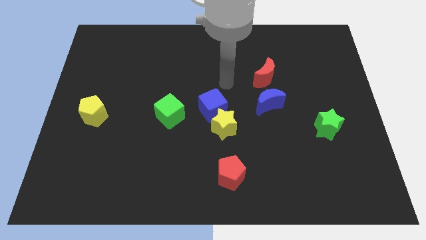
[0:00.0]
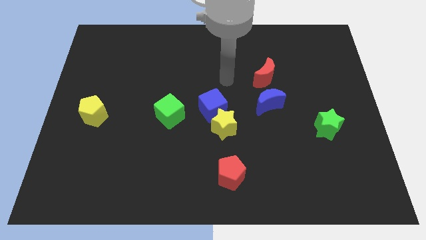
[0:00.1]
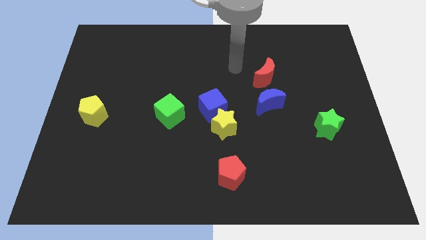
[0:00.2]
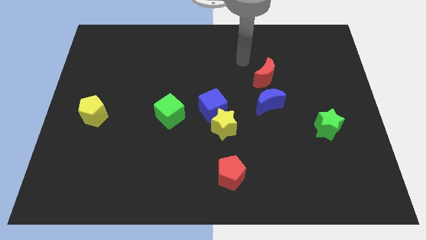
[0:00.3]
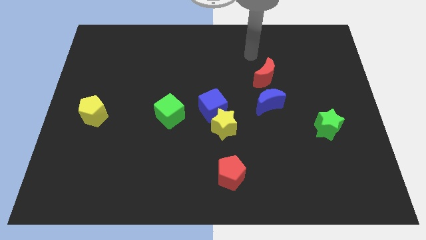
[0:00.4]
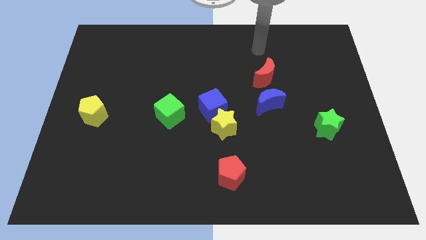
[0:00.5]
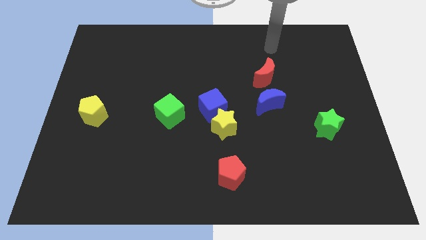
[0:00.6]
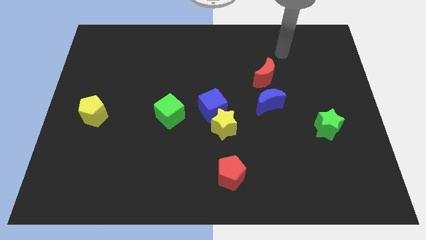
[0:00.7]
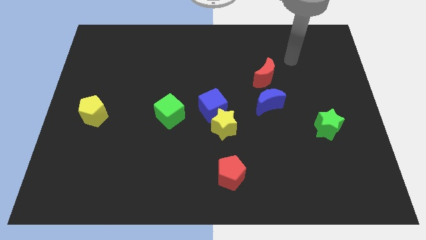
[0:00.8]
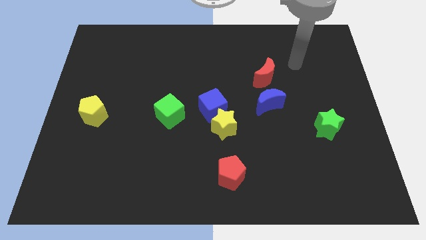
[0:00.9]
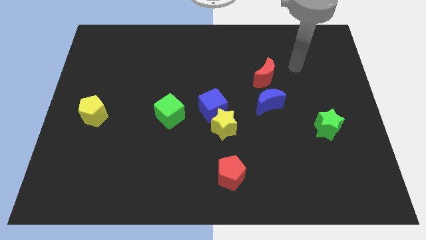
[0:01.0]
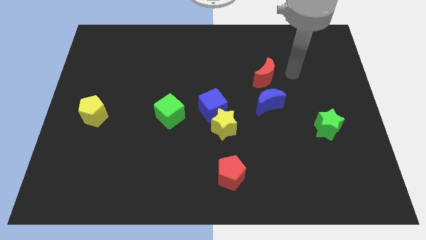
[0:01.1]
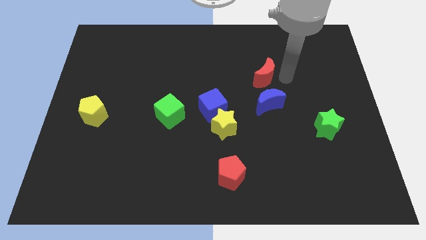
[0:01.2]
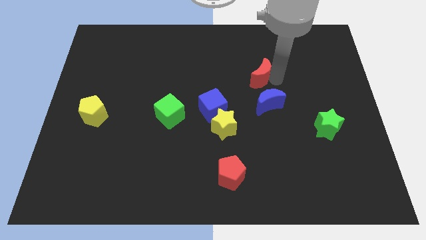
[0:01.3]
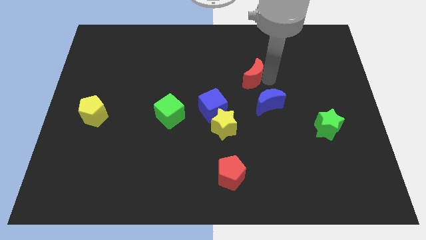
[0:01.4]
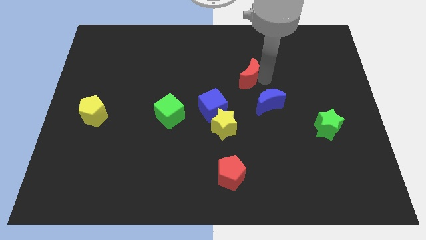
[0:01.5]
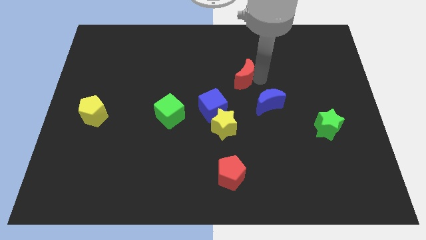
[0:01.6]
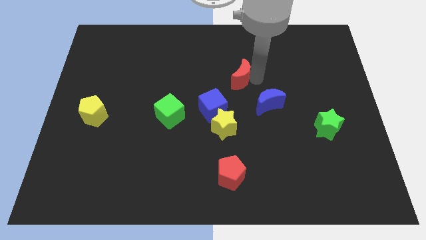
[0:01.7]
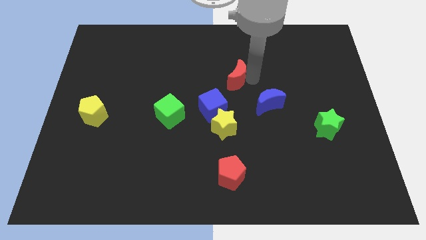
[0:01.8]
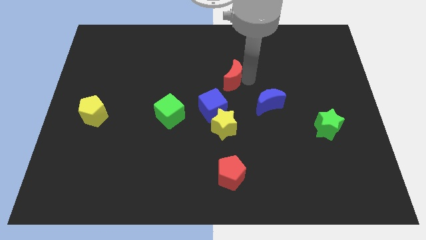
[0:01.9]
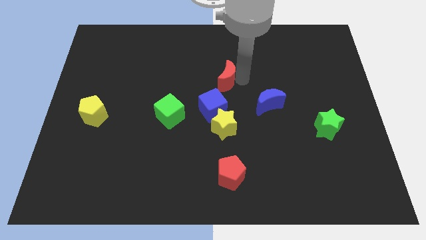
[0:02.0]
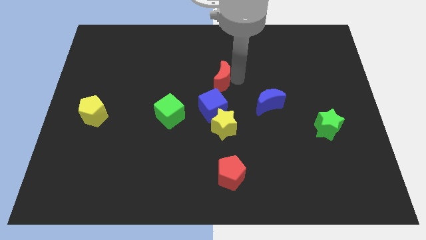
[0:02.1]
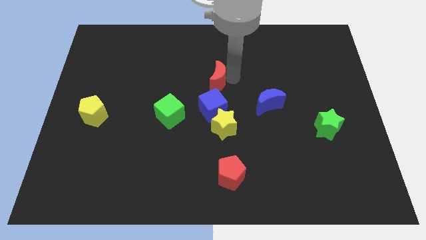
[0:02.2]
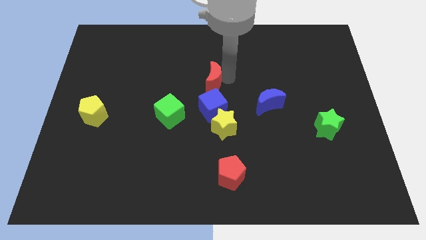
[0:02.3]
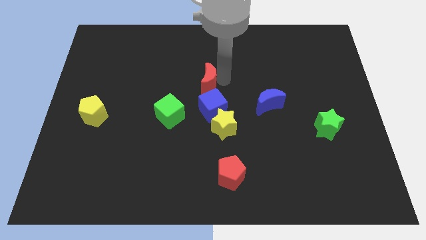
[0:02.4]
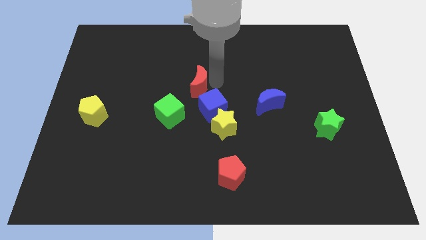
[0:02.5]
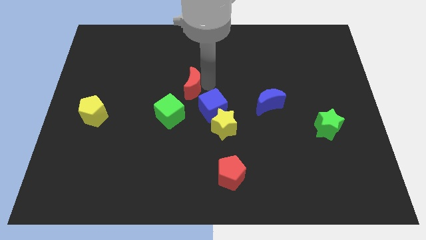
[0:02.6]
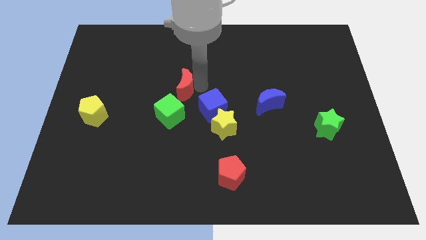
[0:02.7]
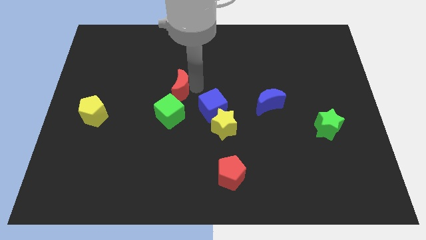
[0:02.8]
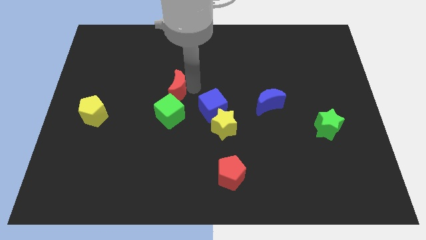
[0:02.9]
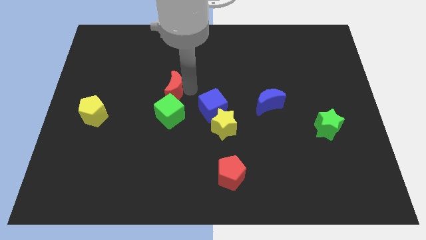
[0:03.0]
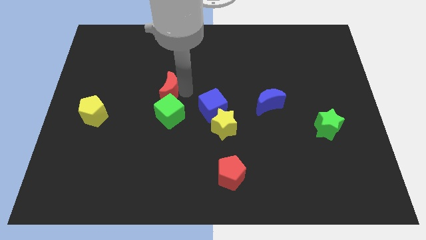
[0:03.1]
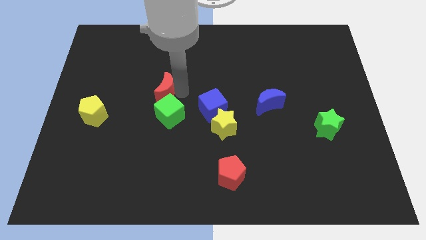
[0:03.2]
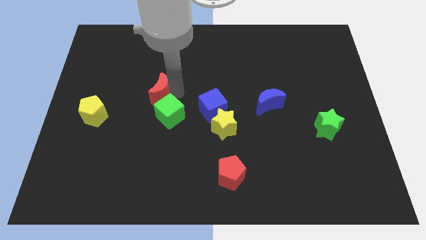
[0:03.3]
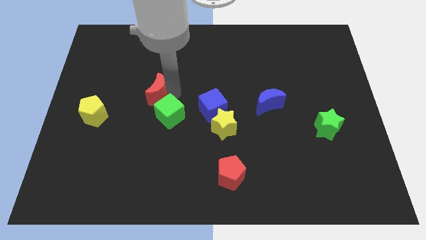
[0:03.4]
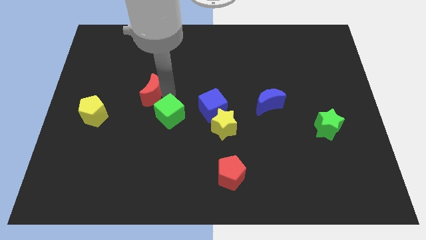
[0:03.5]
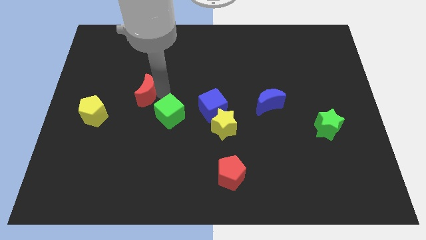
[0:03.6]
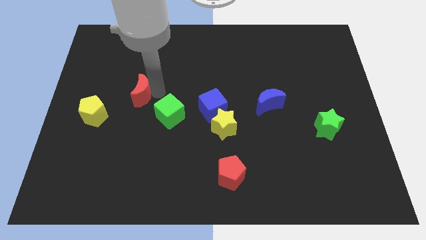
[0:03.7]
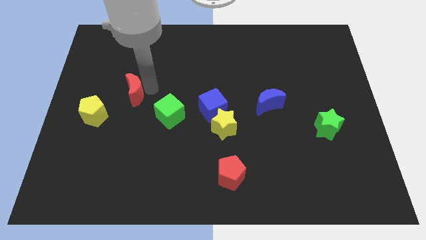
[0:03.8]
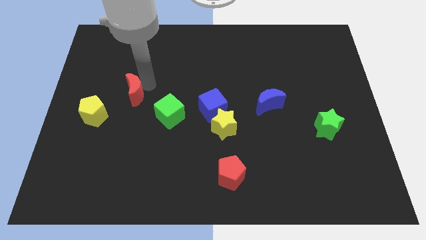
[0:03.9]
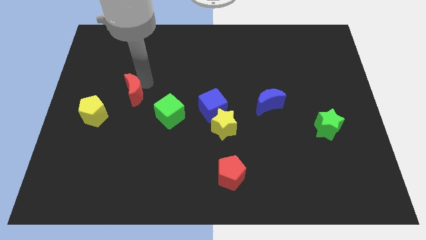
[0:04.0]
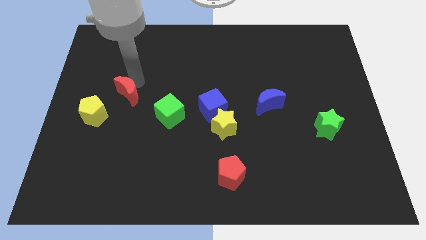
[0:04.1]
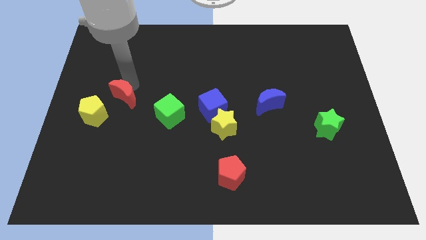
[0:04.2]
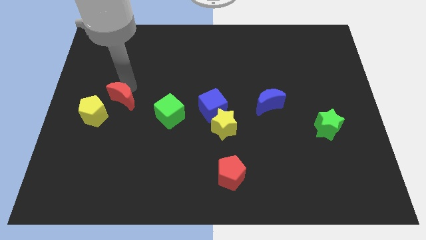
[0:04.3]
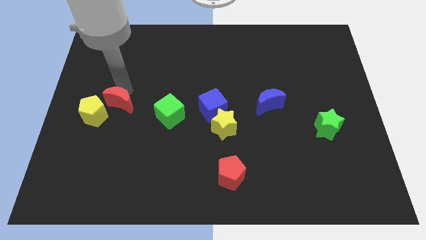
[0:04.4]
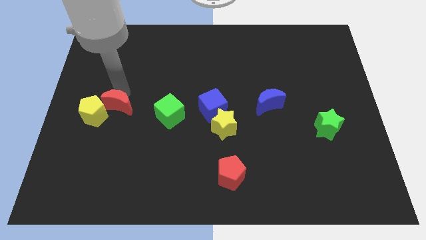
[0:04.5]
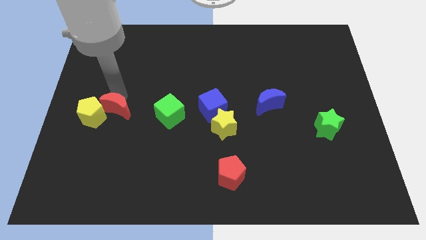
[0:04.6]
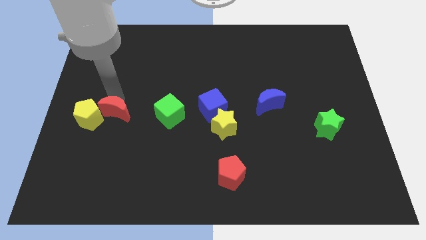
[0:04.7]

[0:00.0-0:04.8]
put the red moon next to the yellow pentagon

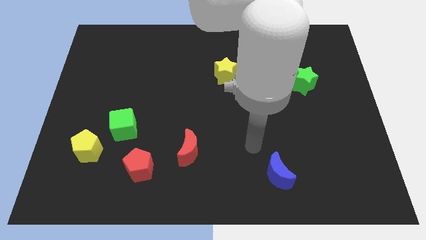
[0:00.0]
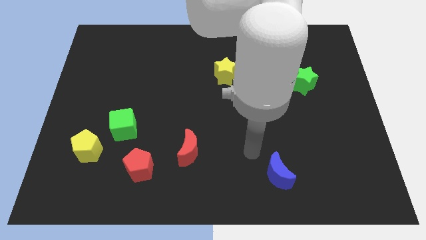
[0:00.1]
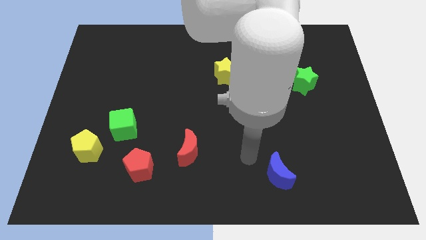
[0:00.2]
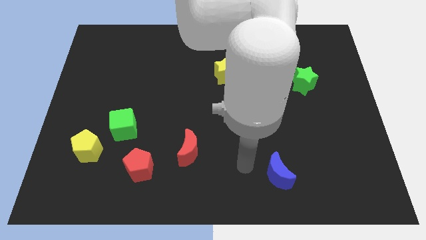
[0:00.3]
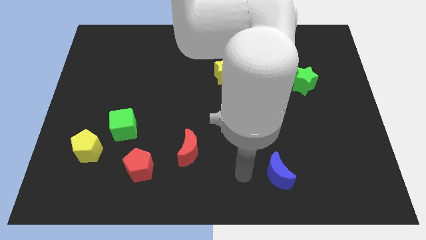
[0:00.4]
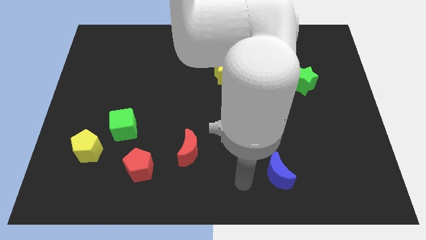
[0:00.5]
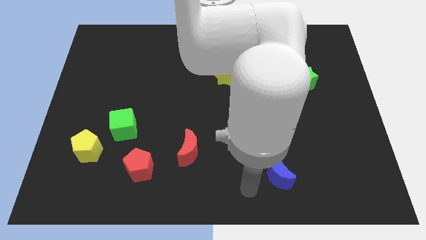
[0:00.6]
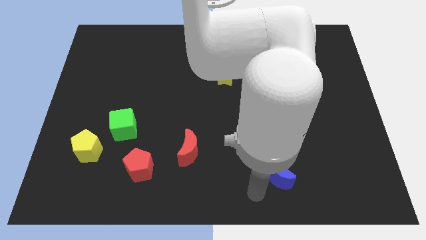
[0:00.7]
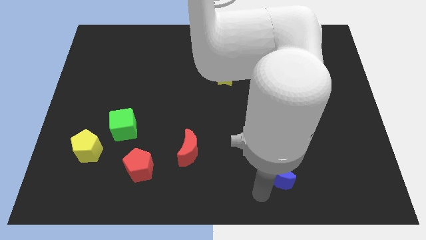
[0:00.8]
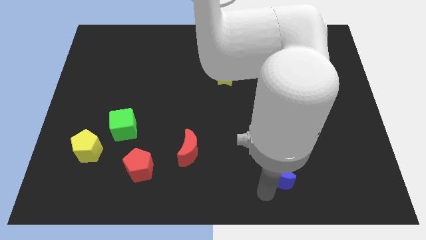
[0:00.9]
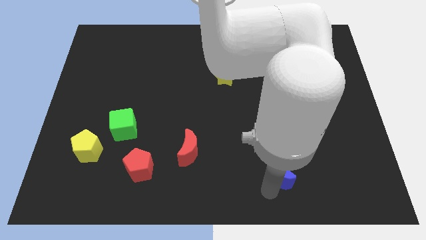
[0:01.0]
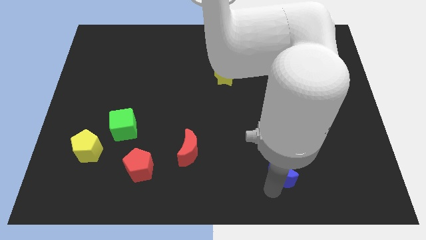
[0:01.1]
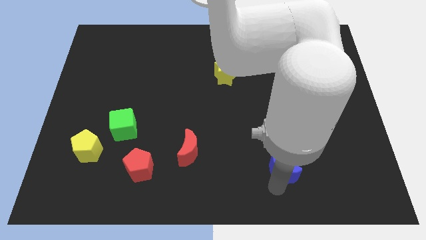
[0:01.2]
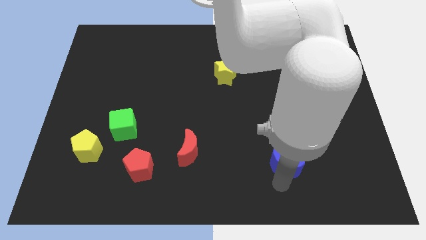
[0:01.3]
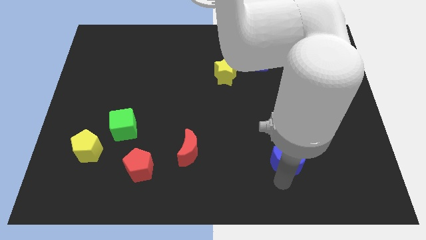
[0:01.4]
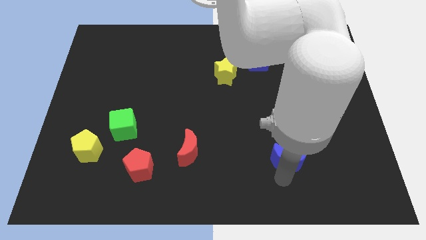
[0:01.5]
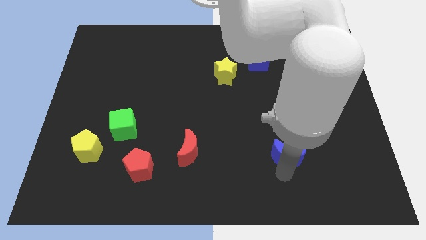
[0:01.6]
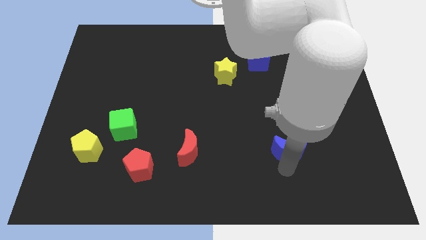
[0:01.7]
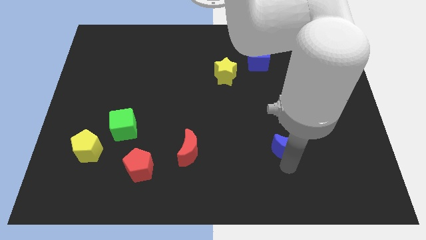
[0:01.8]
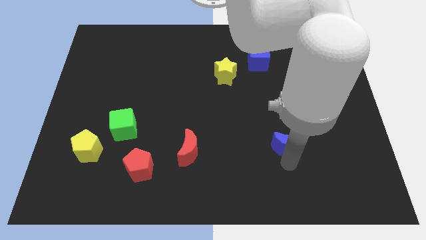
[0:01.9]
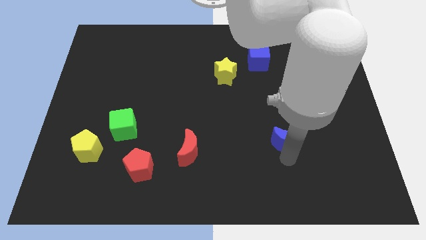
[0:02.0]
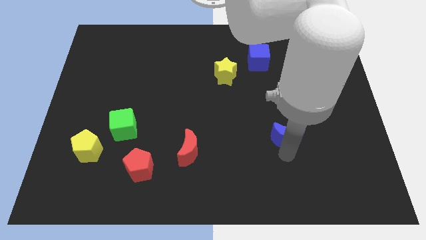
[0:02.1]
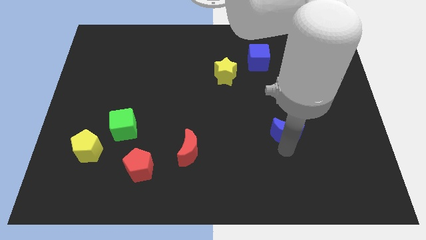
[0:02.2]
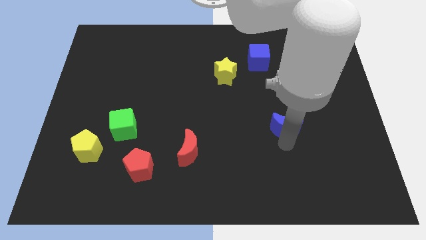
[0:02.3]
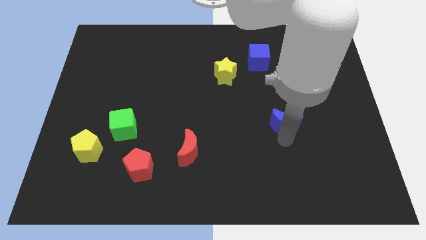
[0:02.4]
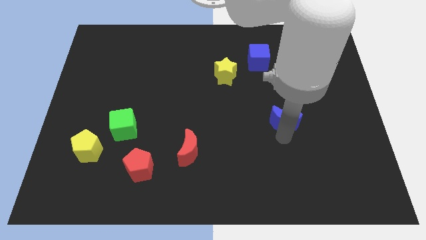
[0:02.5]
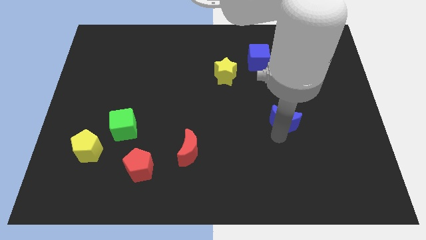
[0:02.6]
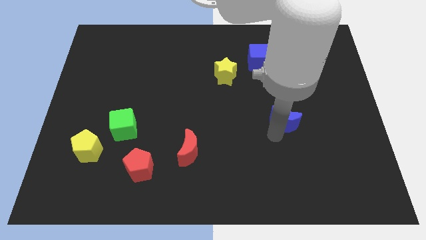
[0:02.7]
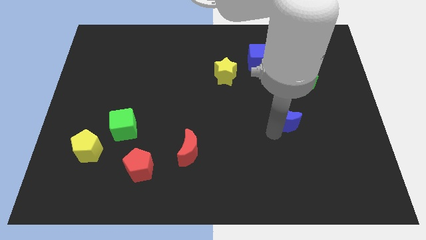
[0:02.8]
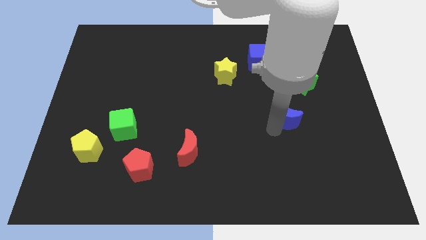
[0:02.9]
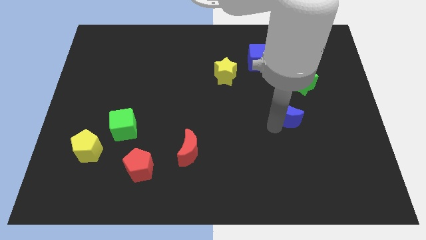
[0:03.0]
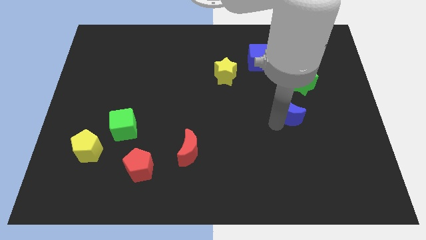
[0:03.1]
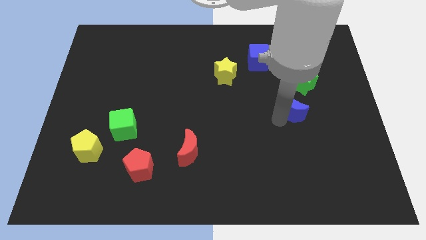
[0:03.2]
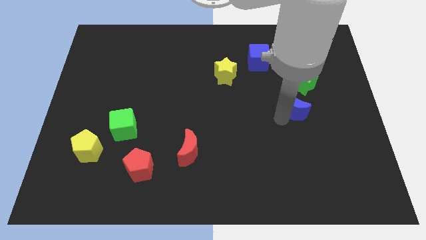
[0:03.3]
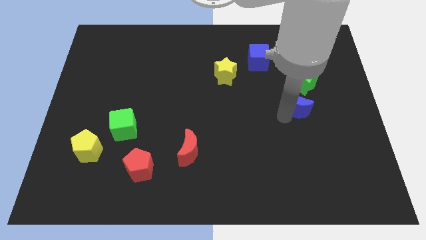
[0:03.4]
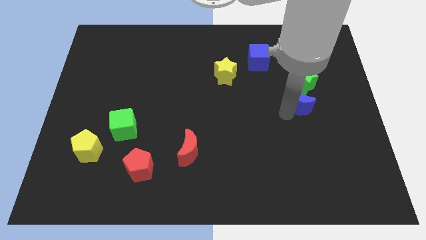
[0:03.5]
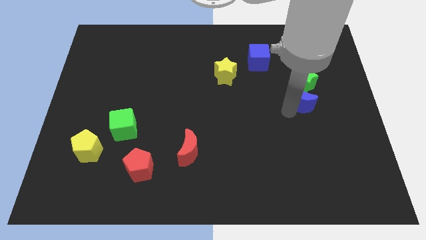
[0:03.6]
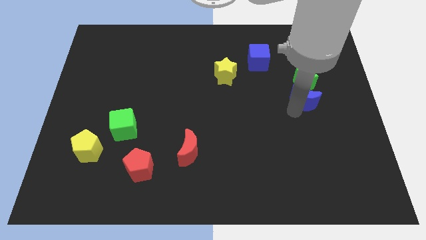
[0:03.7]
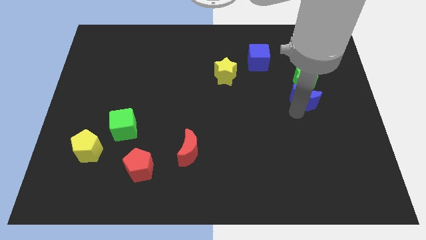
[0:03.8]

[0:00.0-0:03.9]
put the blue moon towards the green star
